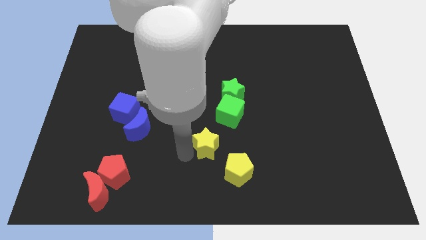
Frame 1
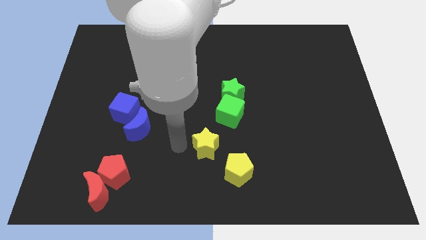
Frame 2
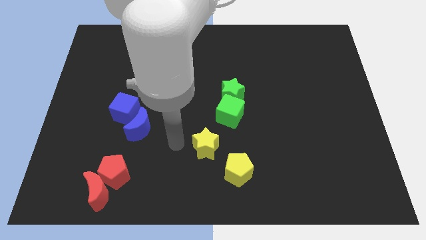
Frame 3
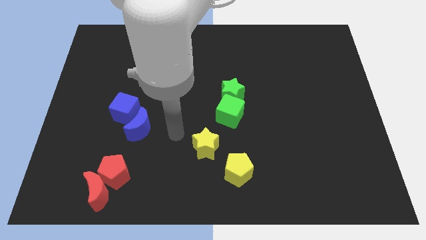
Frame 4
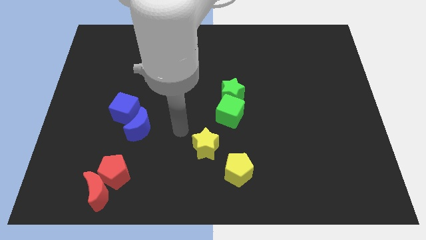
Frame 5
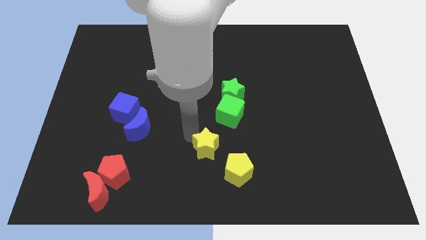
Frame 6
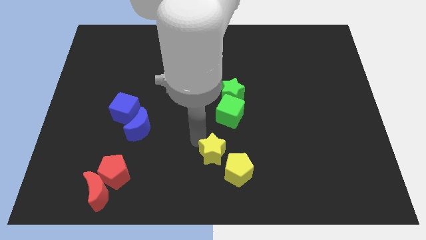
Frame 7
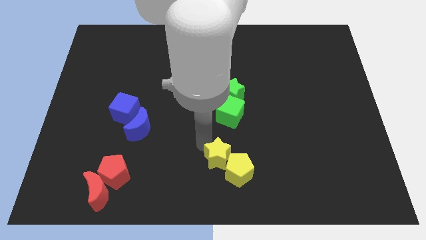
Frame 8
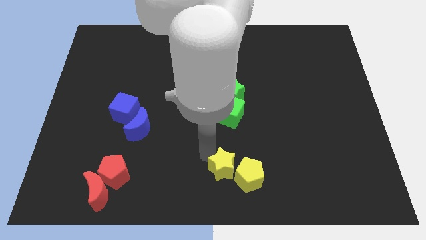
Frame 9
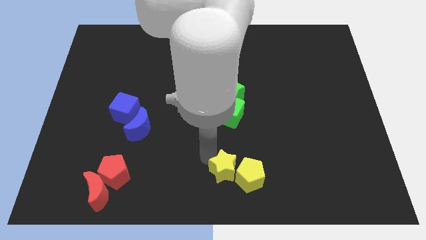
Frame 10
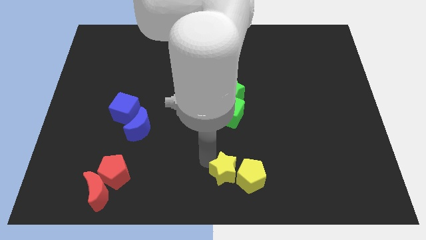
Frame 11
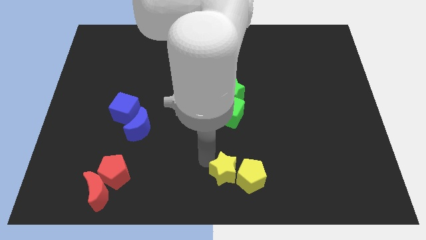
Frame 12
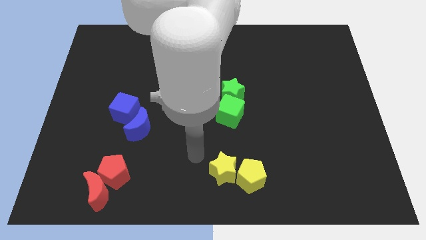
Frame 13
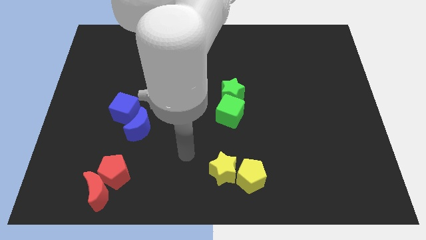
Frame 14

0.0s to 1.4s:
push the yellow pentagon and yellow star towards the bottom center of the board

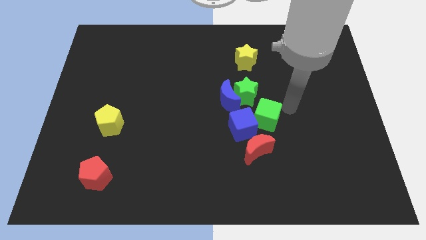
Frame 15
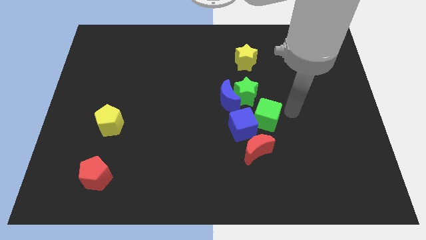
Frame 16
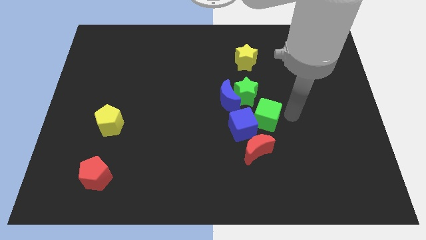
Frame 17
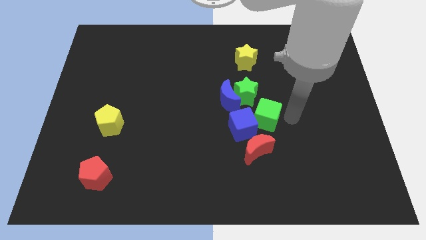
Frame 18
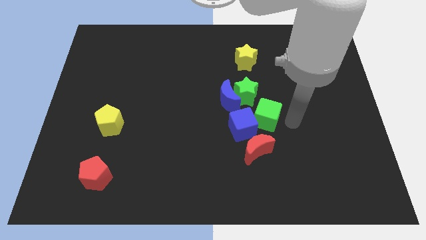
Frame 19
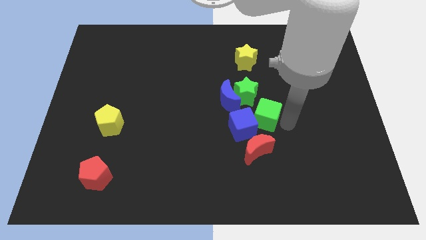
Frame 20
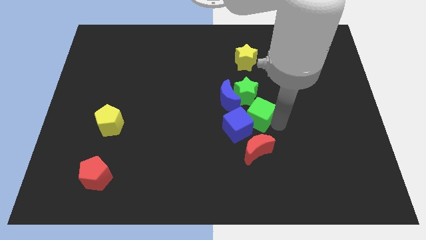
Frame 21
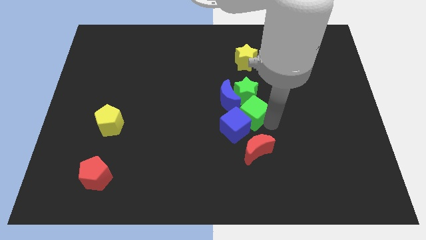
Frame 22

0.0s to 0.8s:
move the green cube bottom of the green star

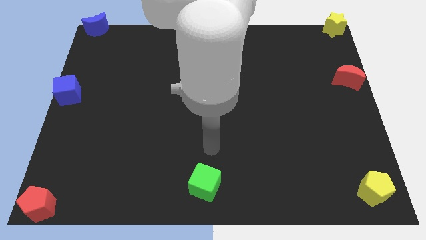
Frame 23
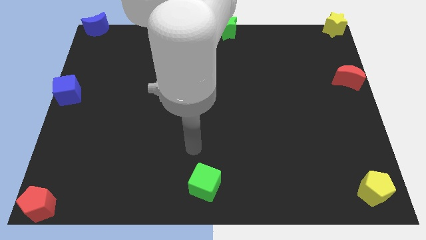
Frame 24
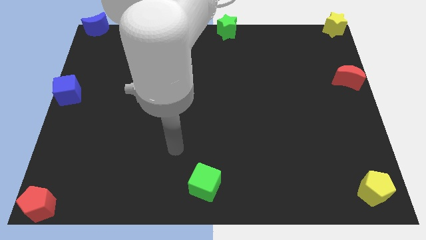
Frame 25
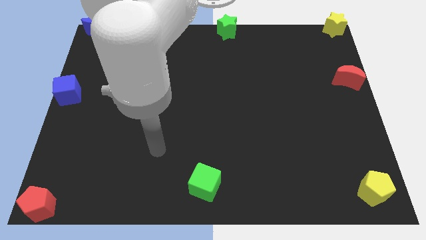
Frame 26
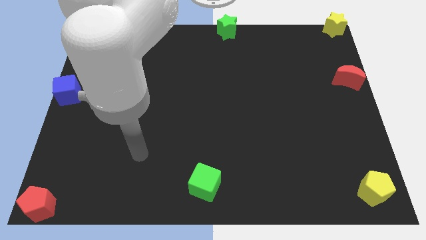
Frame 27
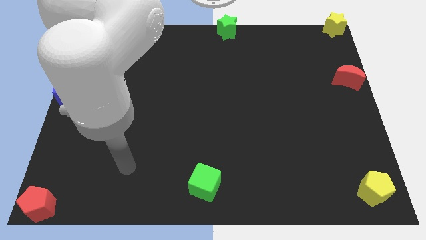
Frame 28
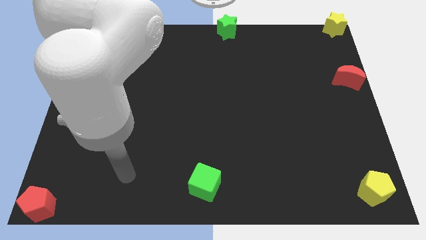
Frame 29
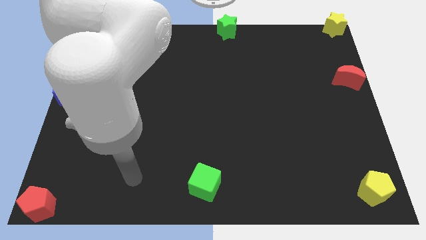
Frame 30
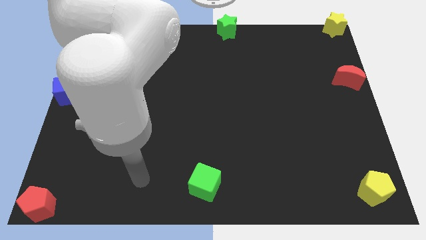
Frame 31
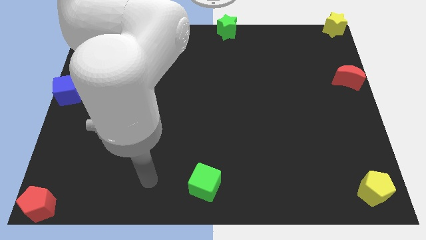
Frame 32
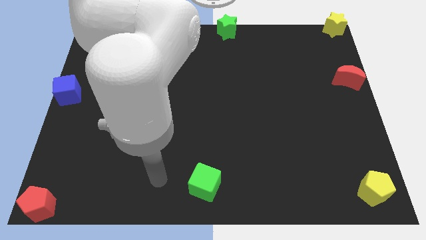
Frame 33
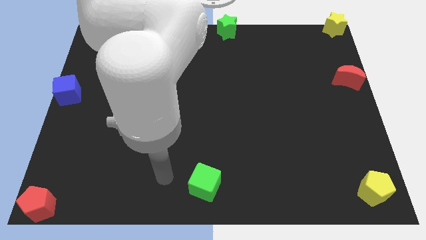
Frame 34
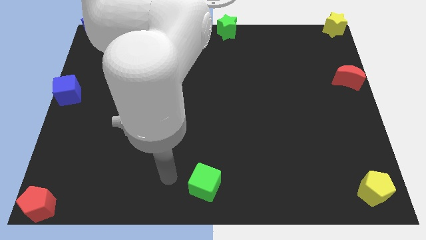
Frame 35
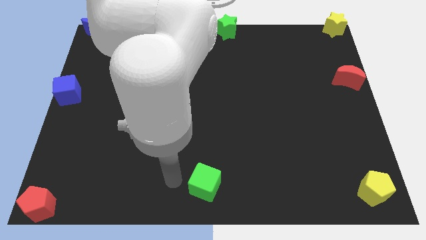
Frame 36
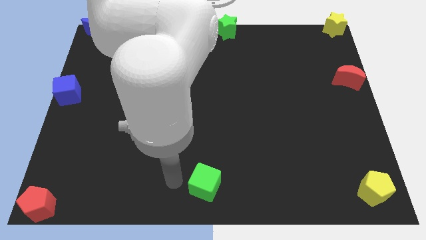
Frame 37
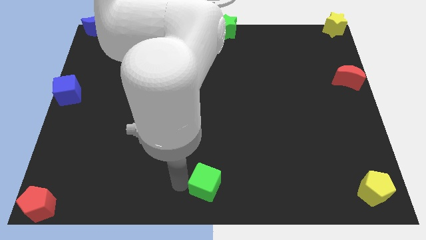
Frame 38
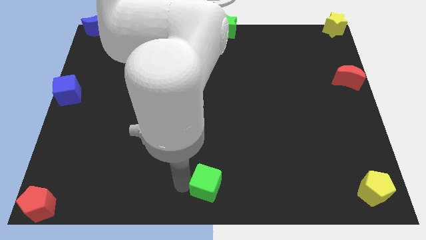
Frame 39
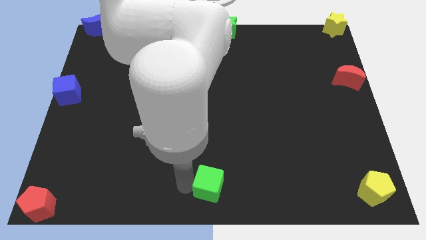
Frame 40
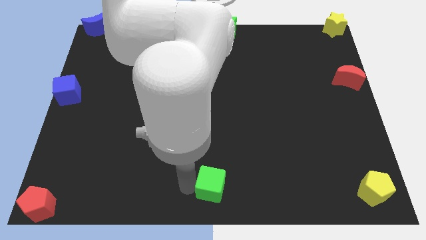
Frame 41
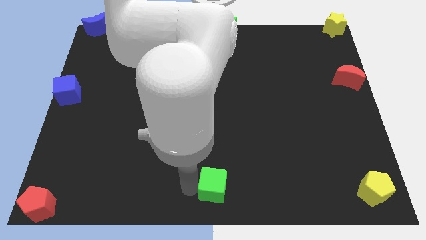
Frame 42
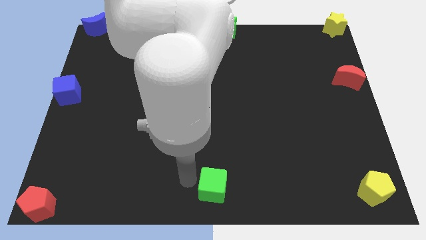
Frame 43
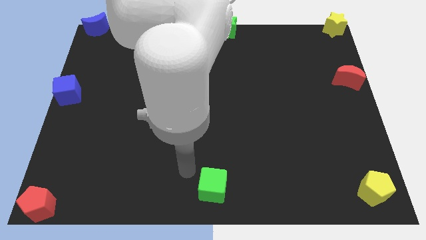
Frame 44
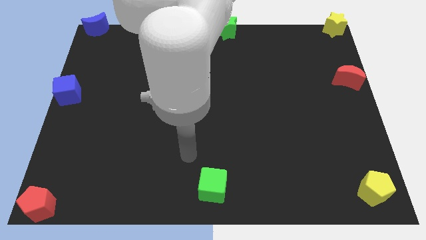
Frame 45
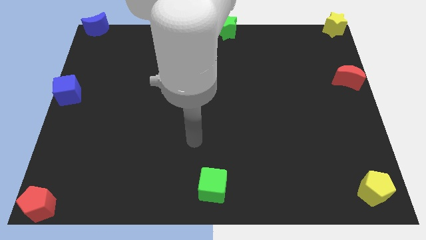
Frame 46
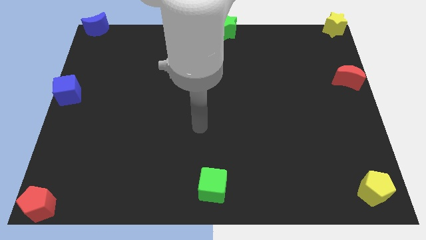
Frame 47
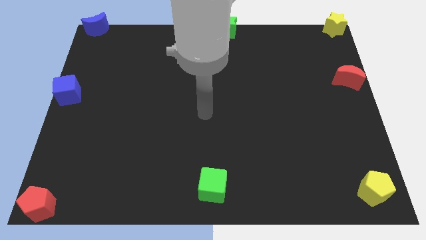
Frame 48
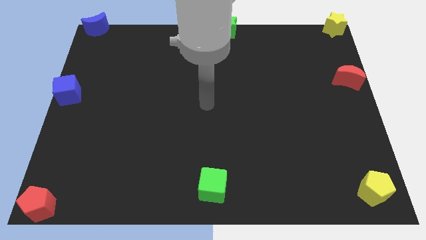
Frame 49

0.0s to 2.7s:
place the green cube to the botto m middle center of the board

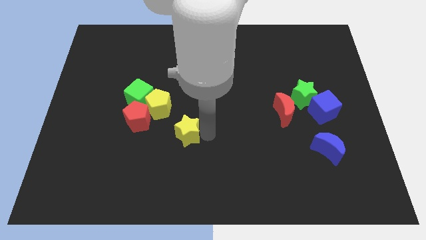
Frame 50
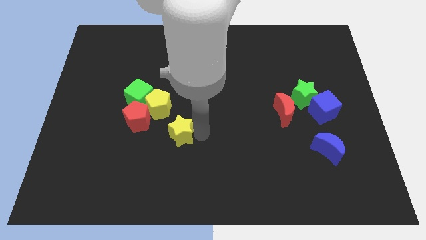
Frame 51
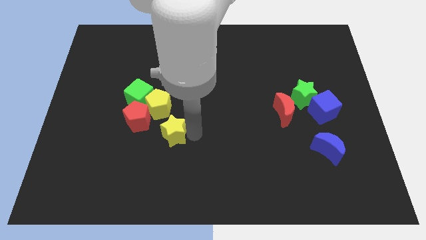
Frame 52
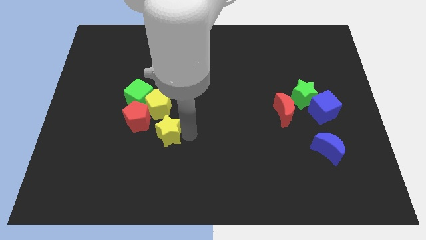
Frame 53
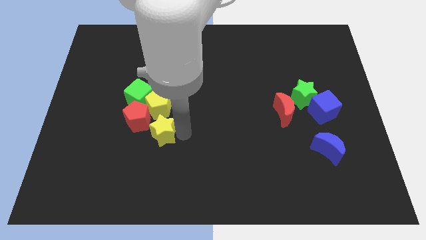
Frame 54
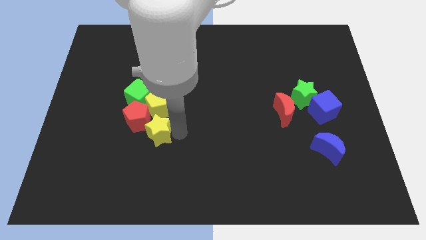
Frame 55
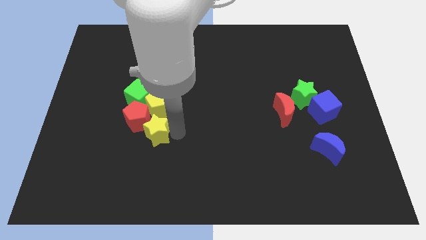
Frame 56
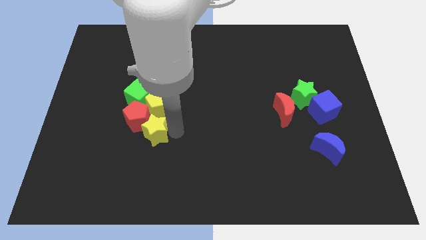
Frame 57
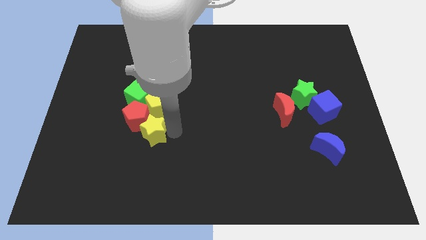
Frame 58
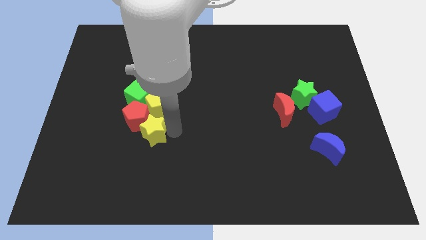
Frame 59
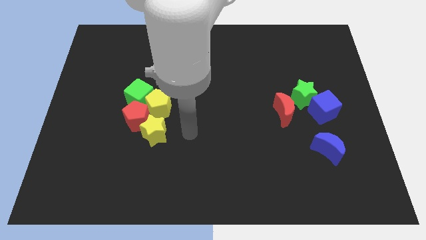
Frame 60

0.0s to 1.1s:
push the yellow star to the bottom right of the red pentagon

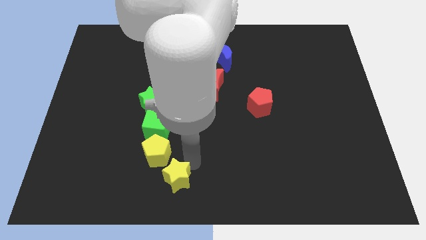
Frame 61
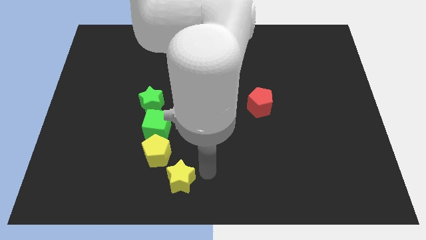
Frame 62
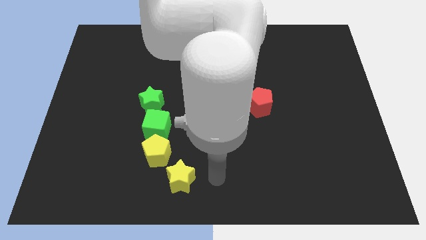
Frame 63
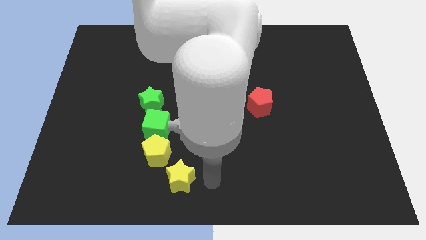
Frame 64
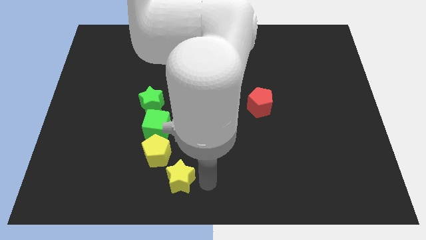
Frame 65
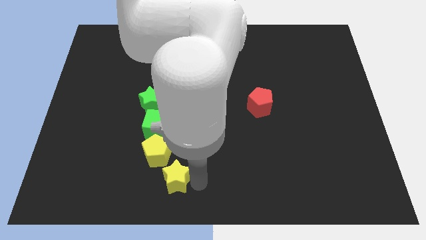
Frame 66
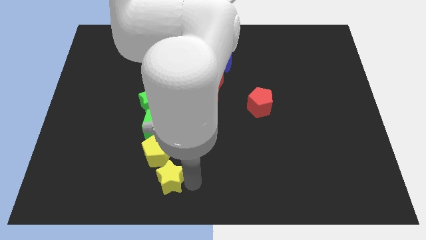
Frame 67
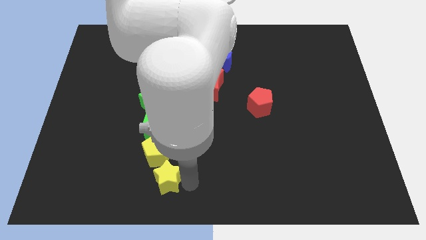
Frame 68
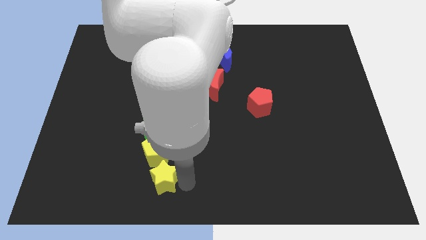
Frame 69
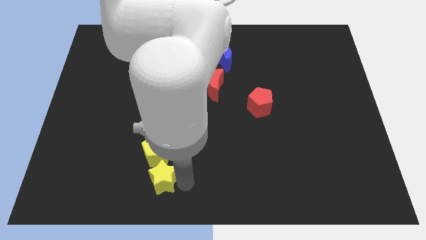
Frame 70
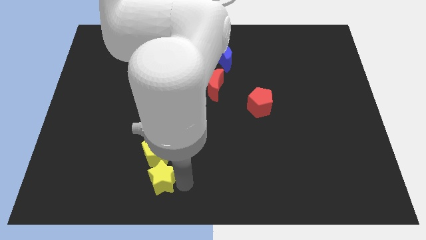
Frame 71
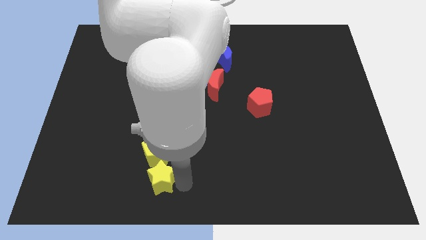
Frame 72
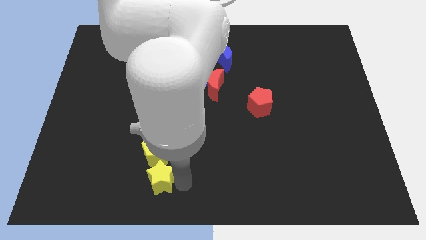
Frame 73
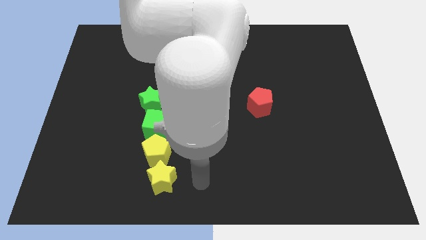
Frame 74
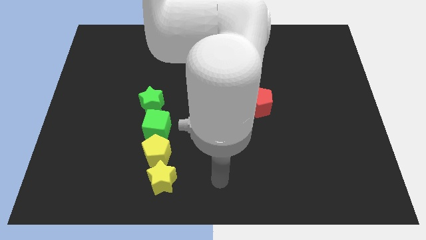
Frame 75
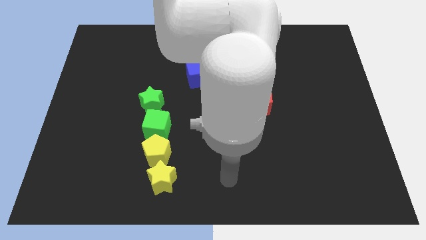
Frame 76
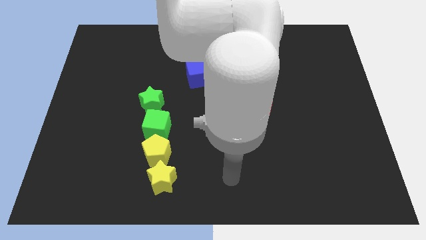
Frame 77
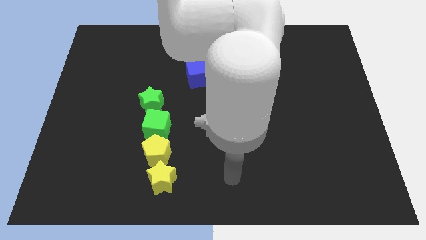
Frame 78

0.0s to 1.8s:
place yellow star down to the yellow pentagon so that all four blocks make a line

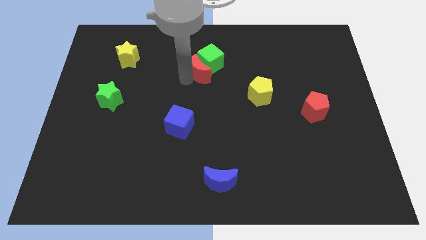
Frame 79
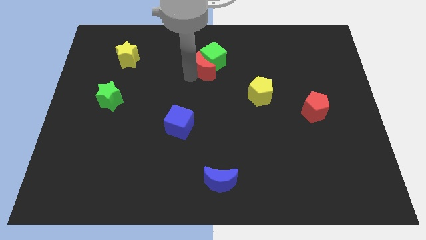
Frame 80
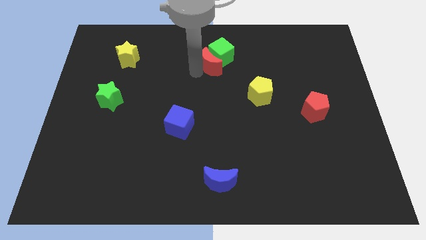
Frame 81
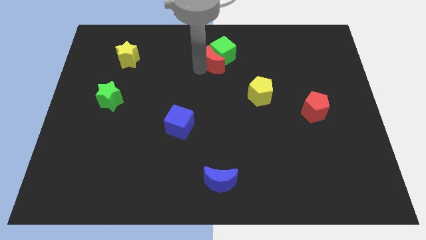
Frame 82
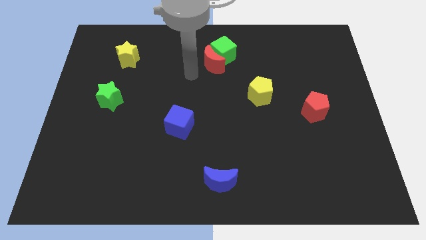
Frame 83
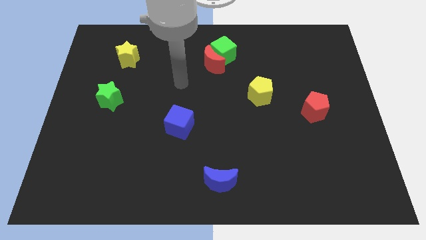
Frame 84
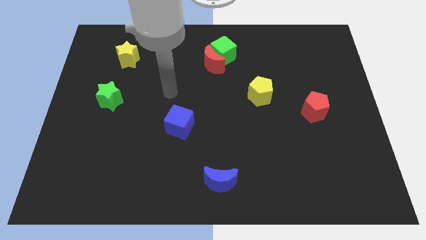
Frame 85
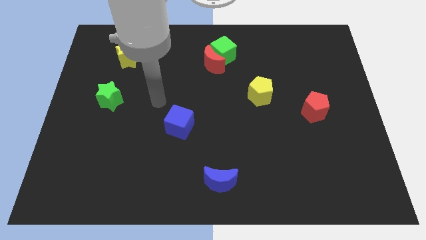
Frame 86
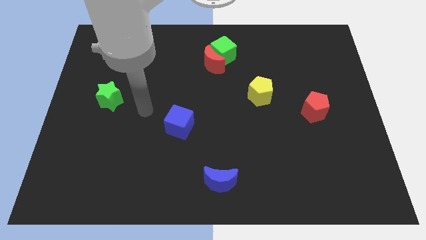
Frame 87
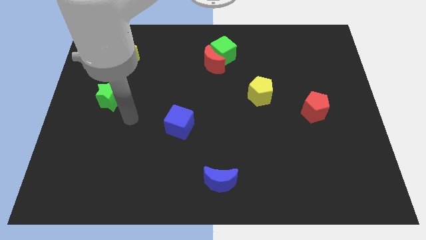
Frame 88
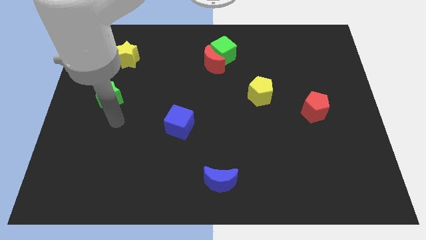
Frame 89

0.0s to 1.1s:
move red moon along with green cube to middle of the board
